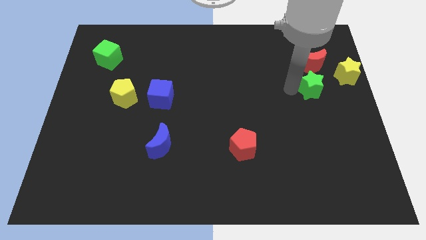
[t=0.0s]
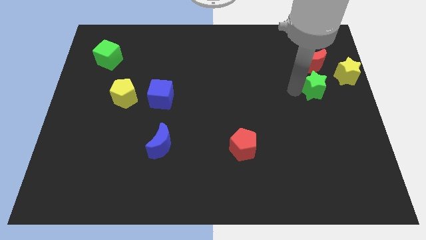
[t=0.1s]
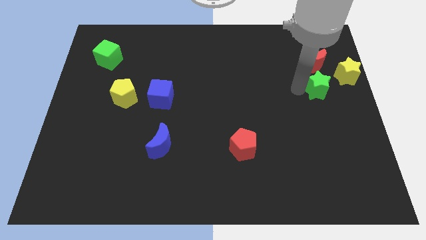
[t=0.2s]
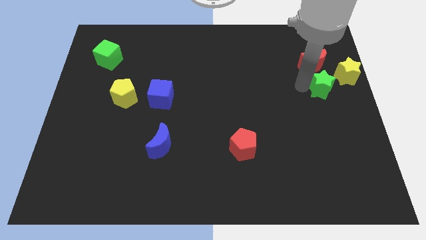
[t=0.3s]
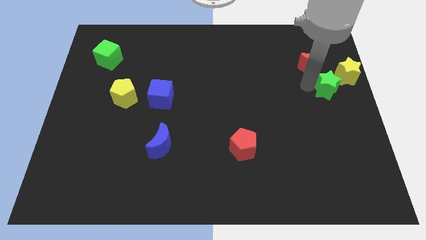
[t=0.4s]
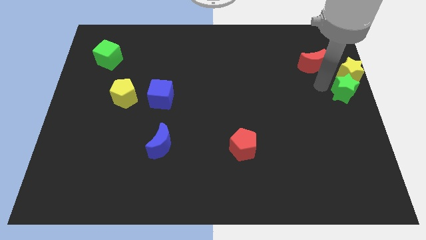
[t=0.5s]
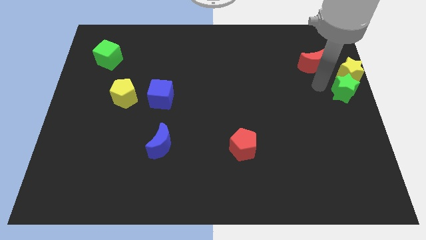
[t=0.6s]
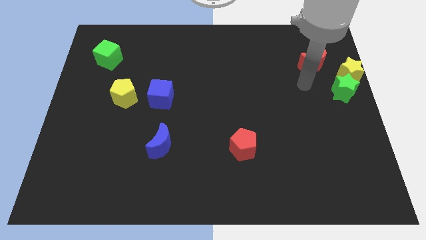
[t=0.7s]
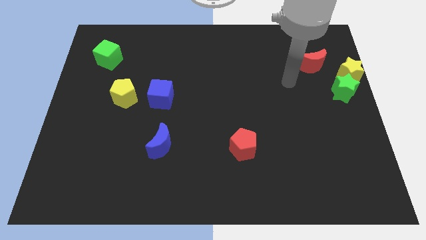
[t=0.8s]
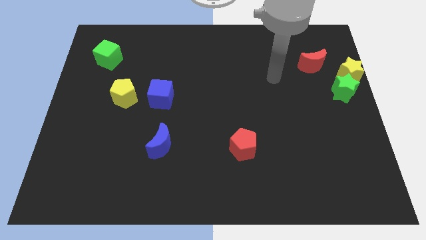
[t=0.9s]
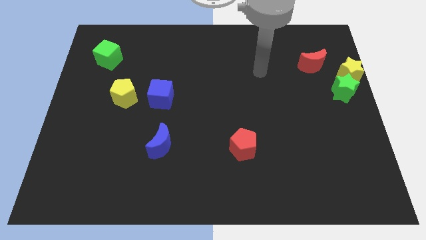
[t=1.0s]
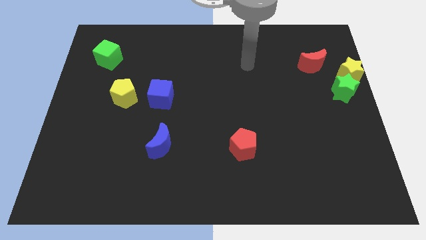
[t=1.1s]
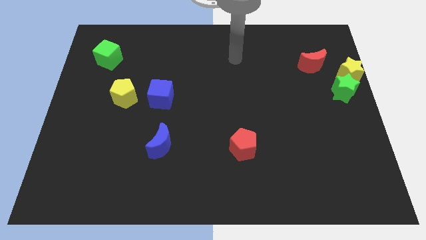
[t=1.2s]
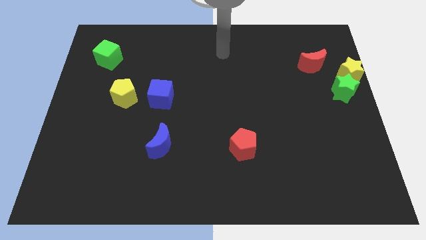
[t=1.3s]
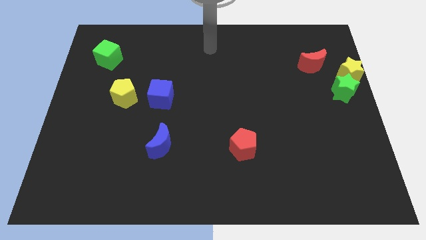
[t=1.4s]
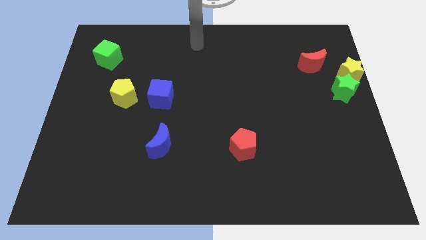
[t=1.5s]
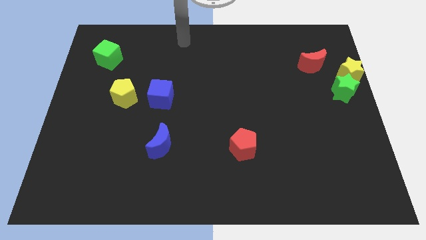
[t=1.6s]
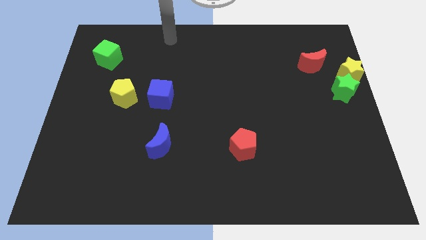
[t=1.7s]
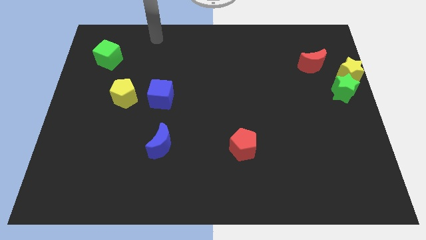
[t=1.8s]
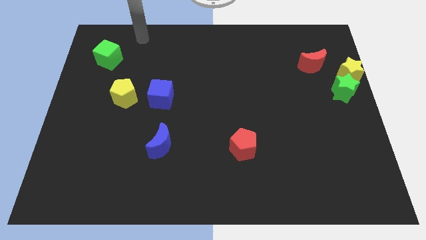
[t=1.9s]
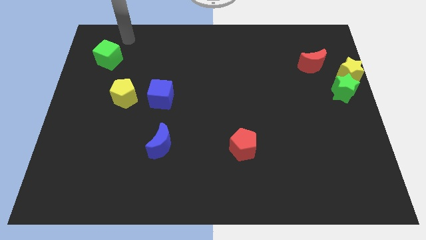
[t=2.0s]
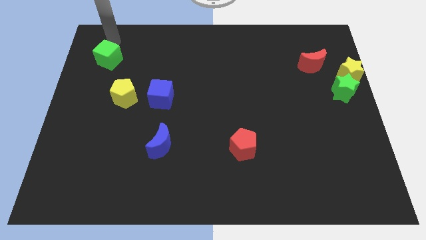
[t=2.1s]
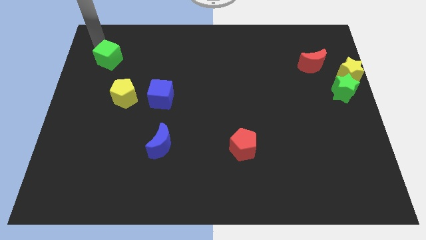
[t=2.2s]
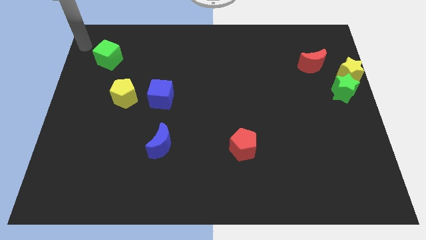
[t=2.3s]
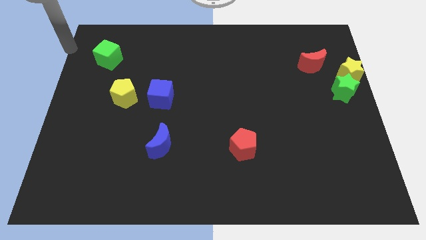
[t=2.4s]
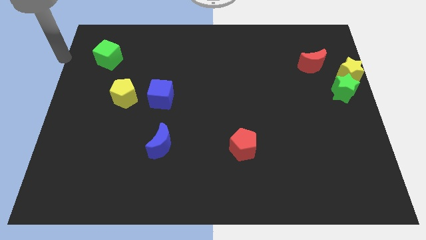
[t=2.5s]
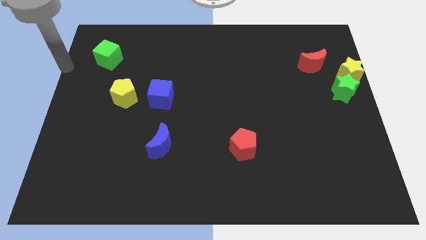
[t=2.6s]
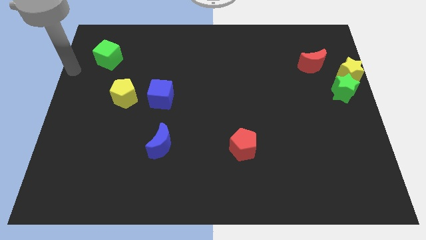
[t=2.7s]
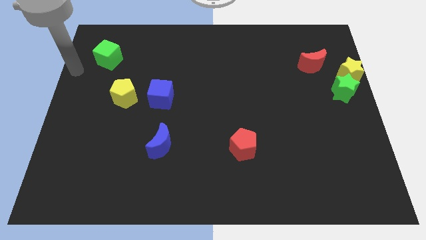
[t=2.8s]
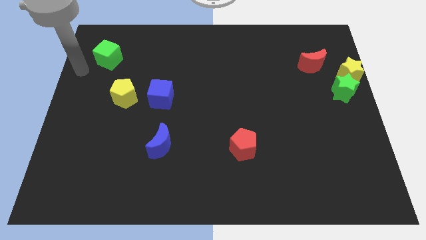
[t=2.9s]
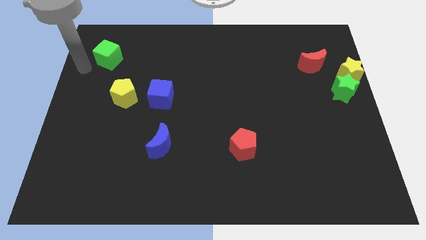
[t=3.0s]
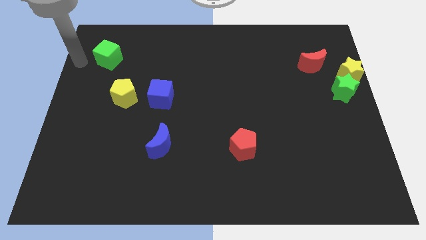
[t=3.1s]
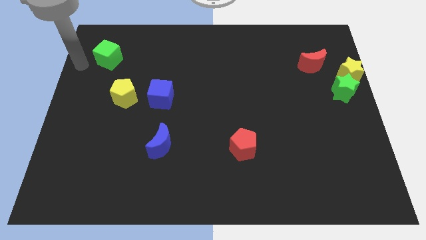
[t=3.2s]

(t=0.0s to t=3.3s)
place the green star below the yellow star

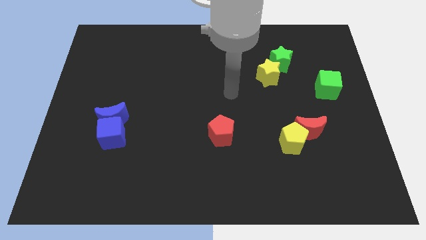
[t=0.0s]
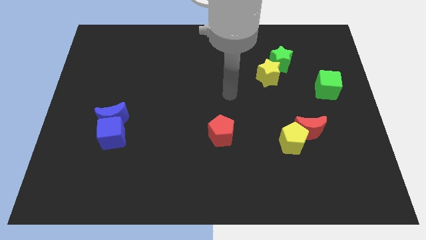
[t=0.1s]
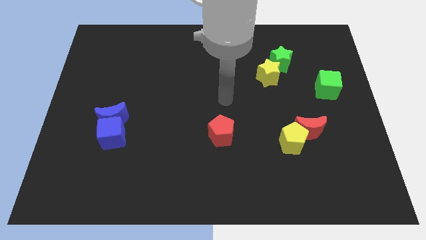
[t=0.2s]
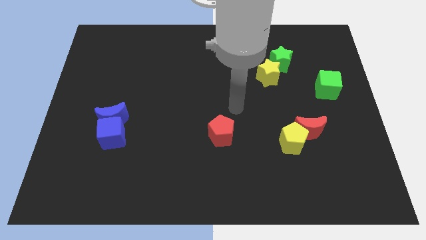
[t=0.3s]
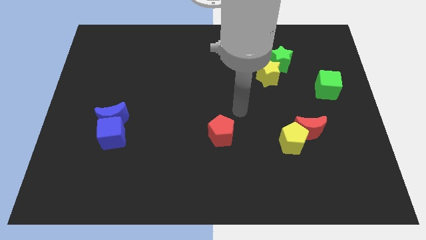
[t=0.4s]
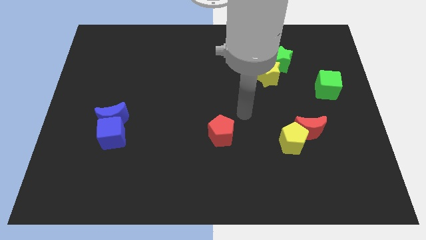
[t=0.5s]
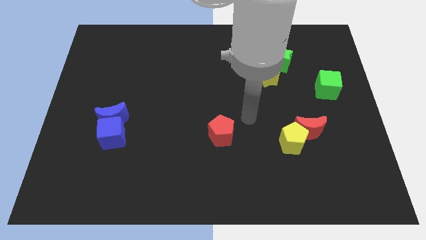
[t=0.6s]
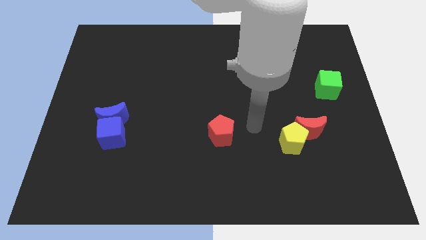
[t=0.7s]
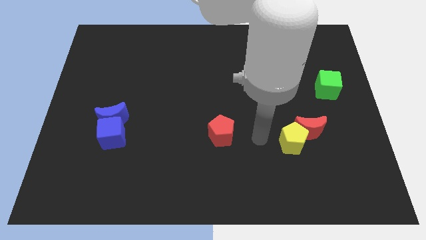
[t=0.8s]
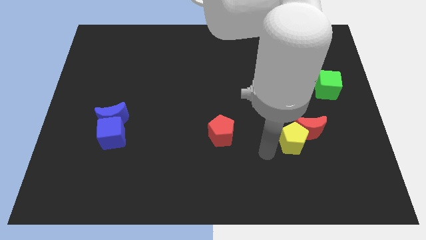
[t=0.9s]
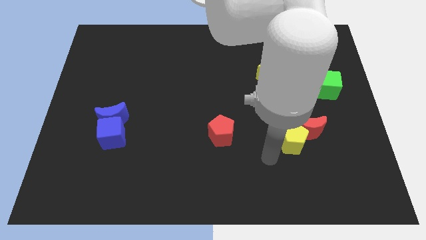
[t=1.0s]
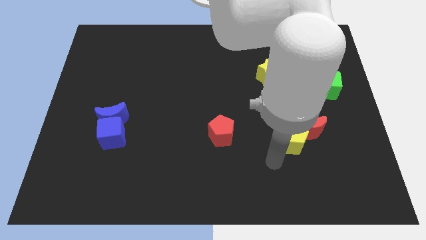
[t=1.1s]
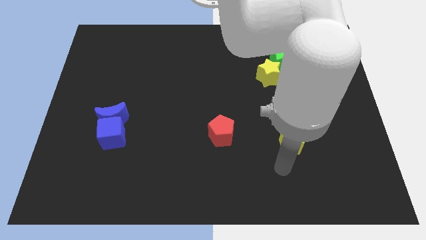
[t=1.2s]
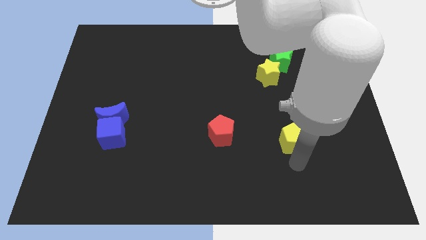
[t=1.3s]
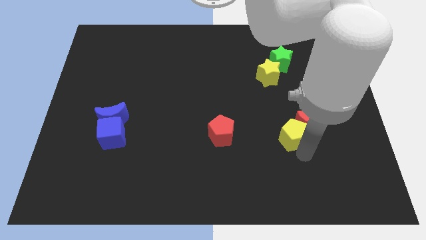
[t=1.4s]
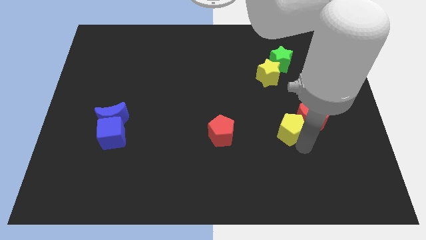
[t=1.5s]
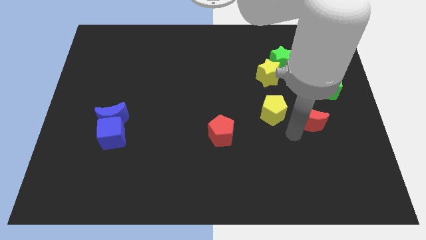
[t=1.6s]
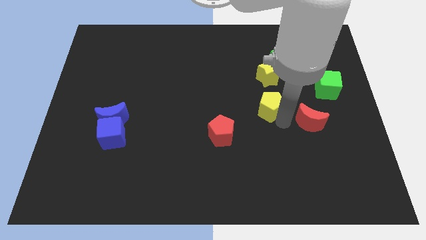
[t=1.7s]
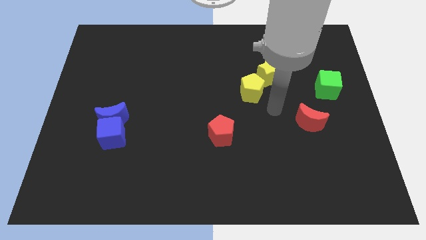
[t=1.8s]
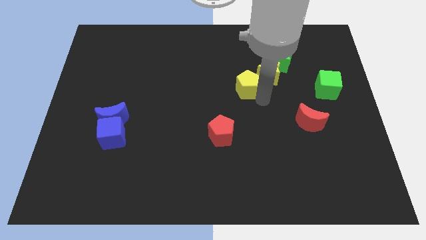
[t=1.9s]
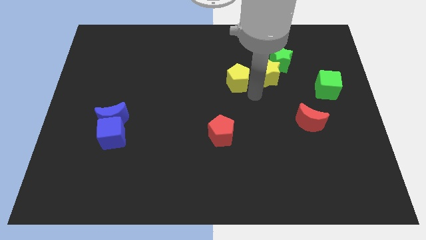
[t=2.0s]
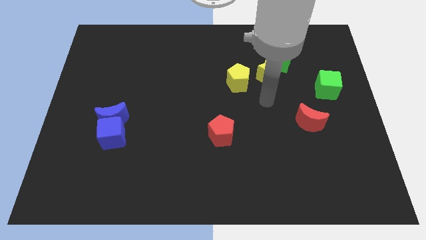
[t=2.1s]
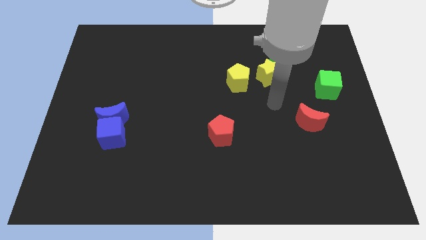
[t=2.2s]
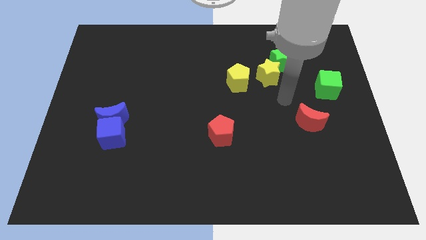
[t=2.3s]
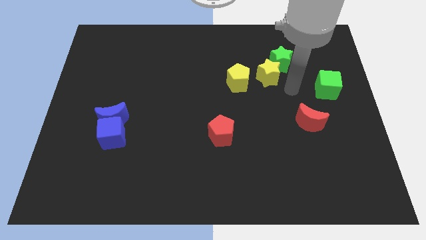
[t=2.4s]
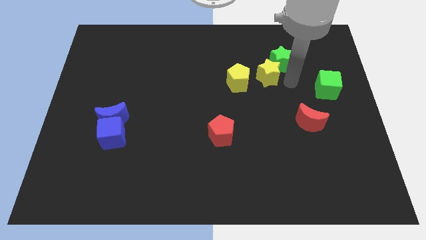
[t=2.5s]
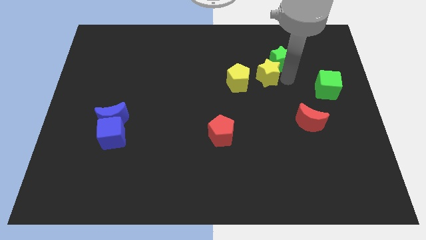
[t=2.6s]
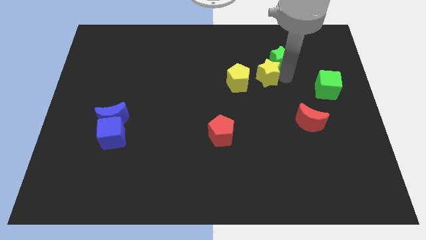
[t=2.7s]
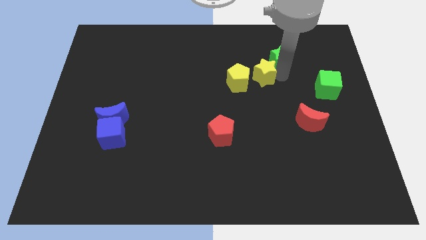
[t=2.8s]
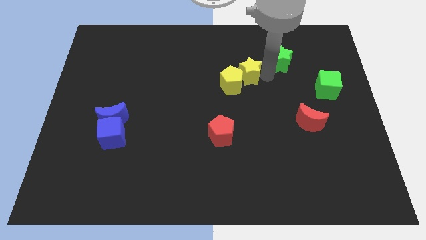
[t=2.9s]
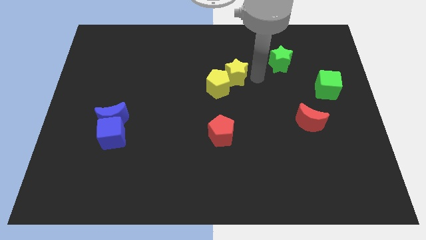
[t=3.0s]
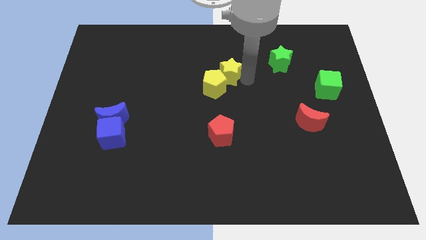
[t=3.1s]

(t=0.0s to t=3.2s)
move yellow blocks on left side

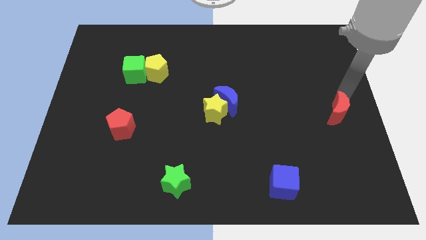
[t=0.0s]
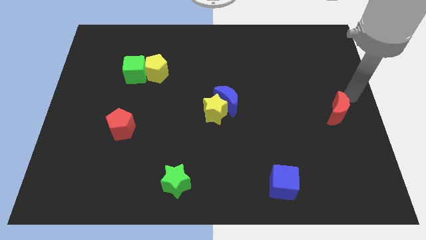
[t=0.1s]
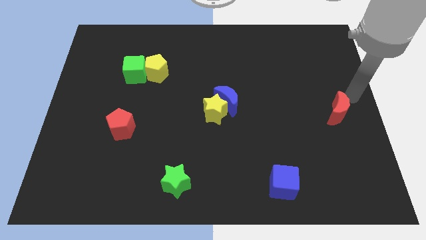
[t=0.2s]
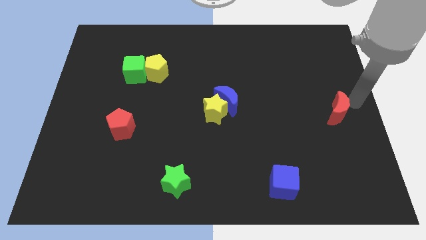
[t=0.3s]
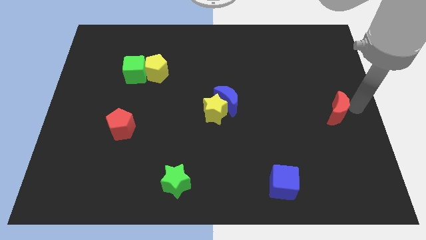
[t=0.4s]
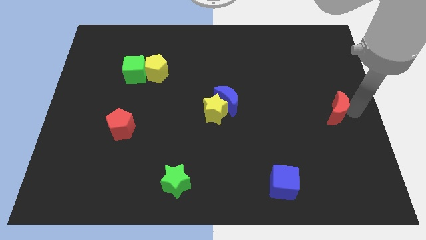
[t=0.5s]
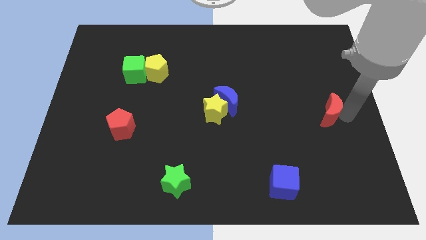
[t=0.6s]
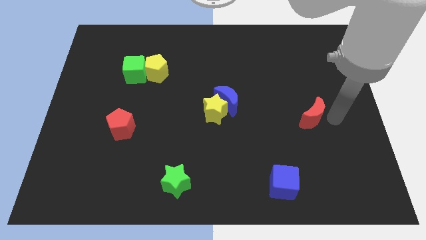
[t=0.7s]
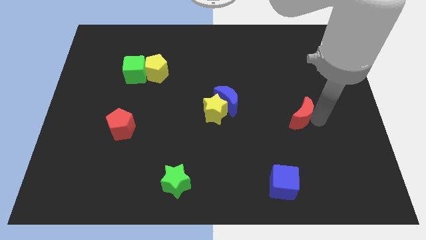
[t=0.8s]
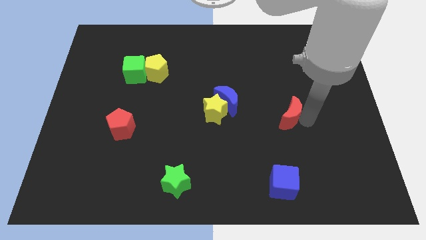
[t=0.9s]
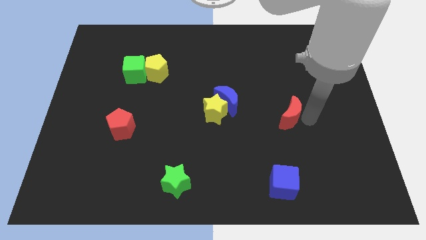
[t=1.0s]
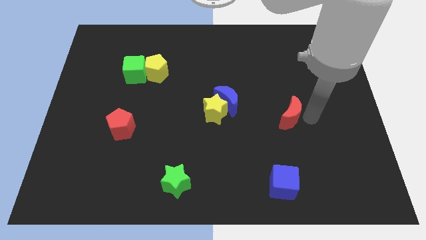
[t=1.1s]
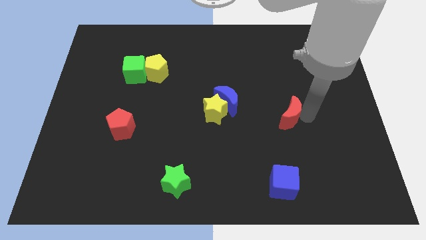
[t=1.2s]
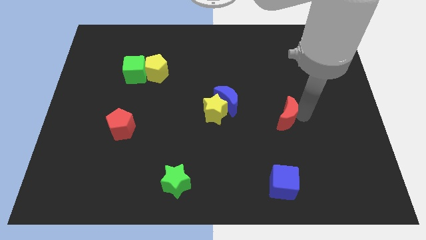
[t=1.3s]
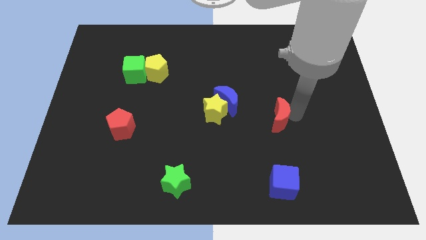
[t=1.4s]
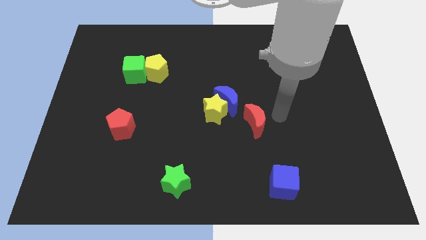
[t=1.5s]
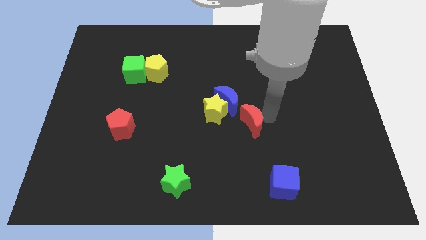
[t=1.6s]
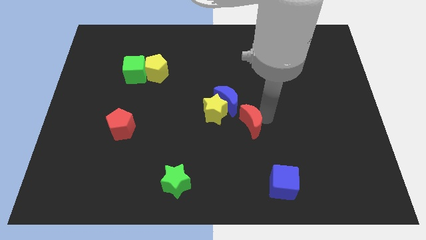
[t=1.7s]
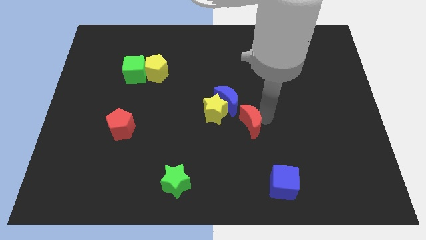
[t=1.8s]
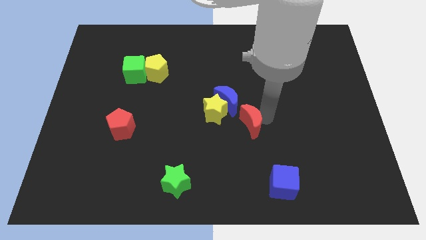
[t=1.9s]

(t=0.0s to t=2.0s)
push the red moon near to the blue moon

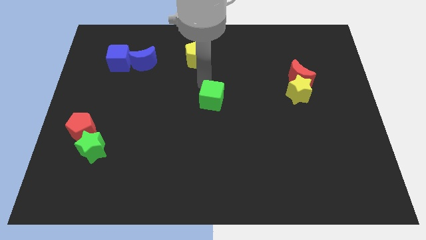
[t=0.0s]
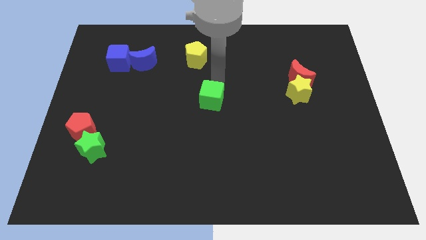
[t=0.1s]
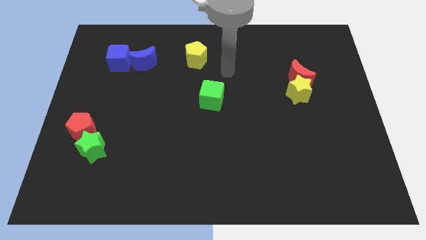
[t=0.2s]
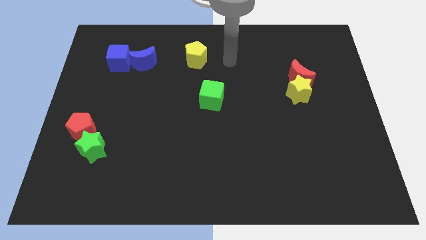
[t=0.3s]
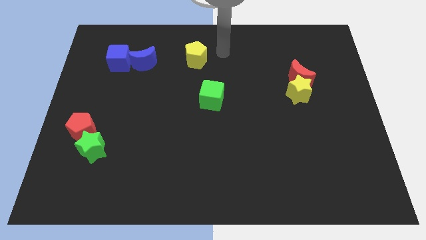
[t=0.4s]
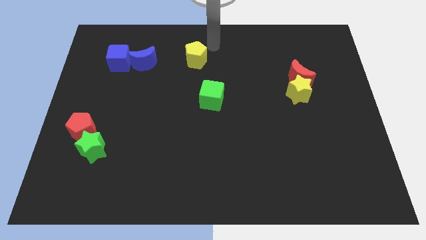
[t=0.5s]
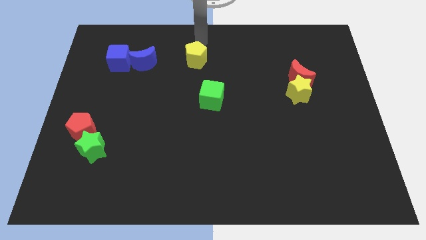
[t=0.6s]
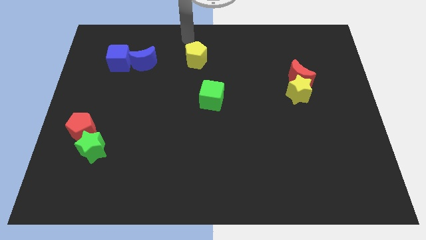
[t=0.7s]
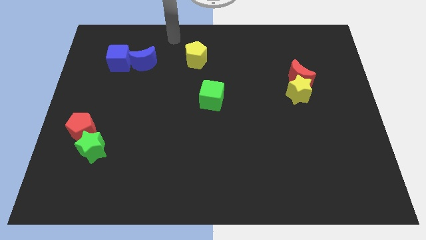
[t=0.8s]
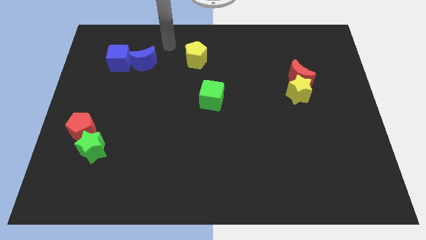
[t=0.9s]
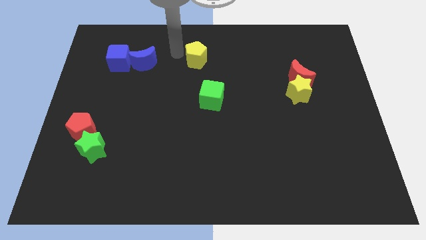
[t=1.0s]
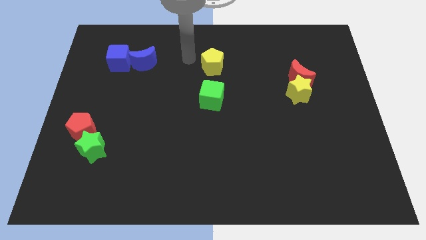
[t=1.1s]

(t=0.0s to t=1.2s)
point your arm at the left of the yellow pentagon
